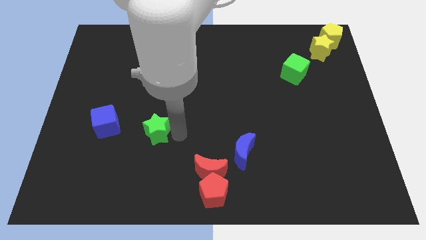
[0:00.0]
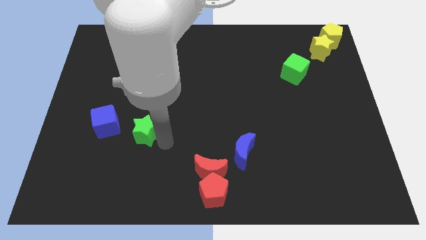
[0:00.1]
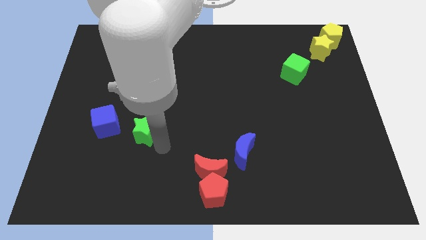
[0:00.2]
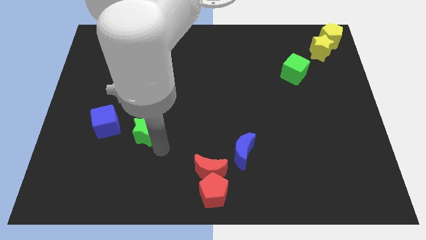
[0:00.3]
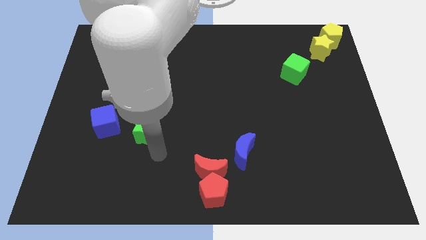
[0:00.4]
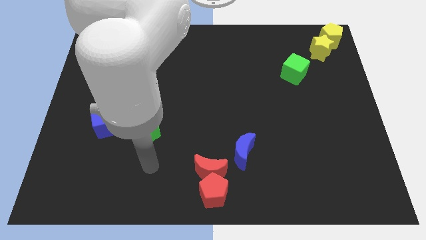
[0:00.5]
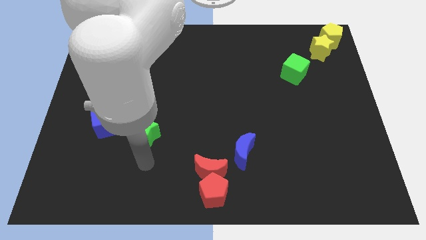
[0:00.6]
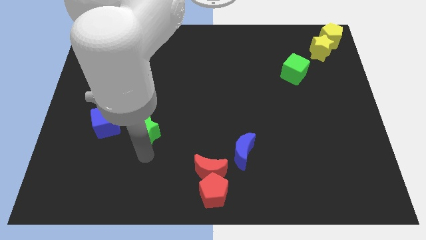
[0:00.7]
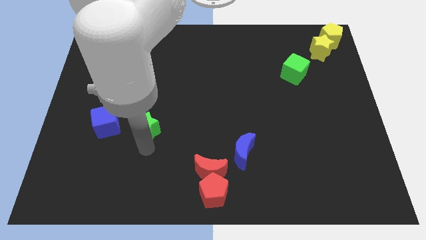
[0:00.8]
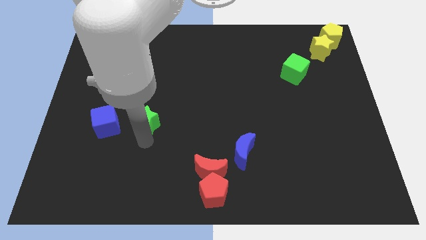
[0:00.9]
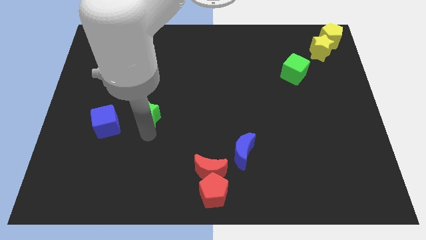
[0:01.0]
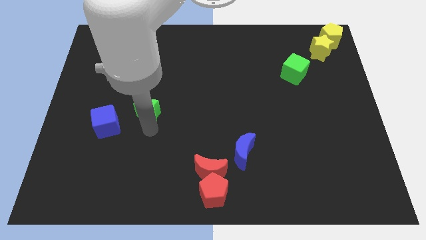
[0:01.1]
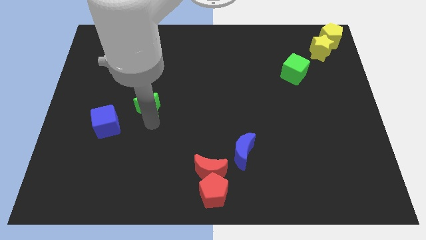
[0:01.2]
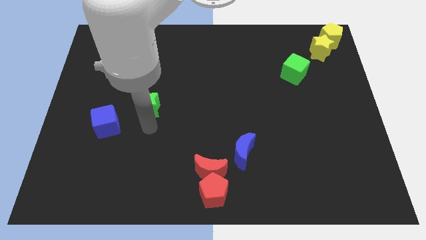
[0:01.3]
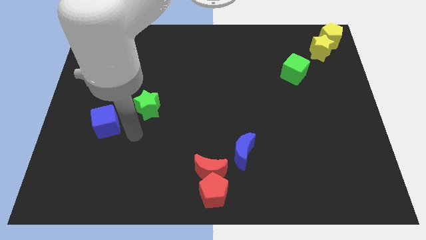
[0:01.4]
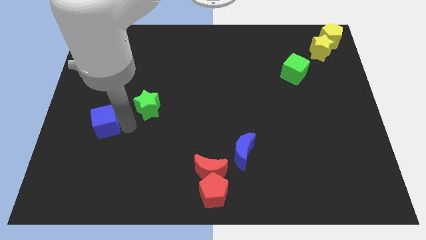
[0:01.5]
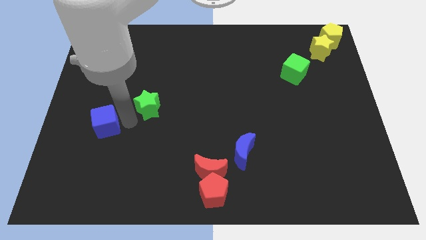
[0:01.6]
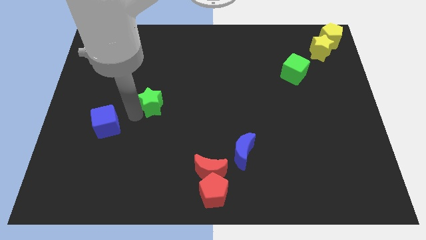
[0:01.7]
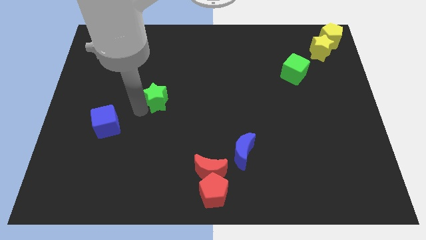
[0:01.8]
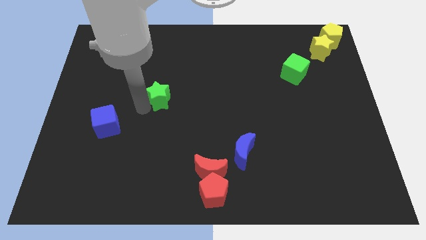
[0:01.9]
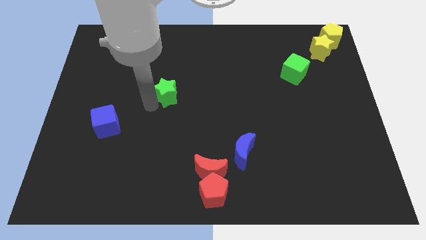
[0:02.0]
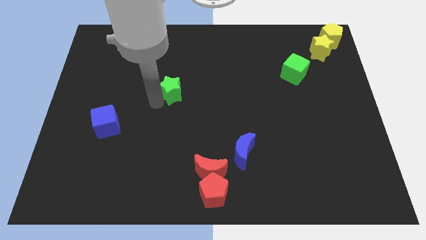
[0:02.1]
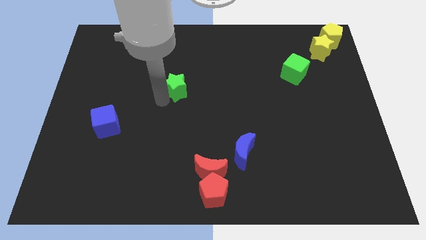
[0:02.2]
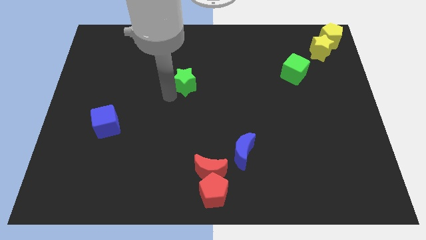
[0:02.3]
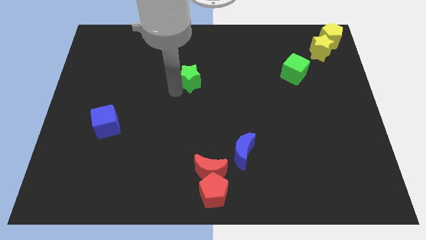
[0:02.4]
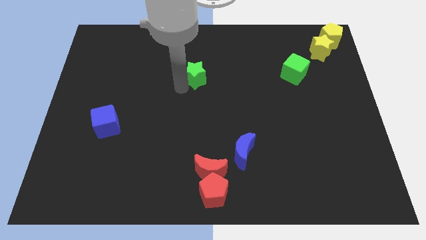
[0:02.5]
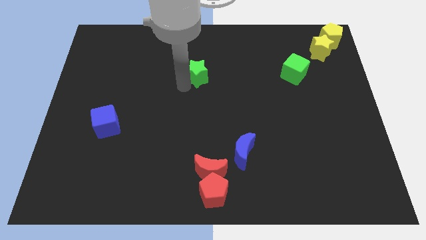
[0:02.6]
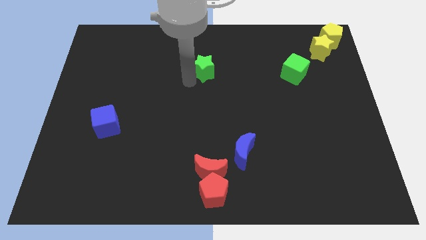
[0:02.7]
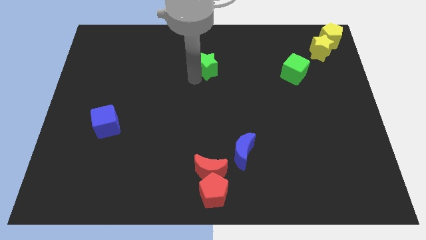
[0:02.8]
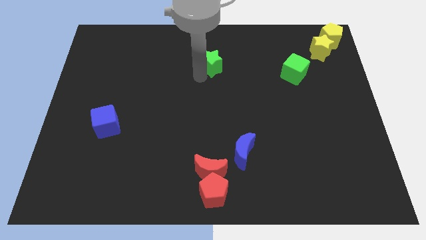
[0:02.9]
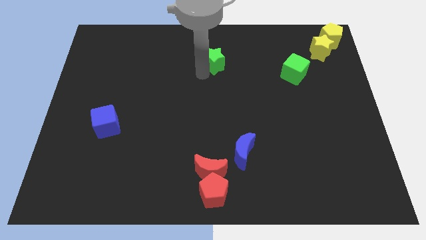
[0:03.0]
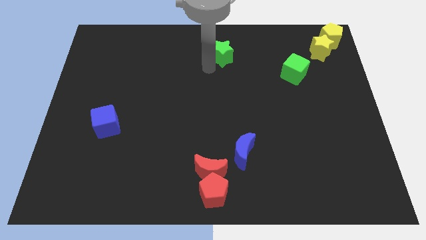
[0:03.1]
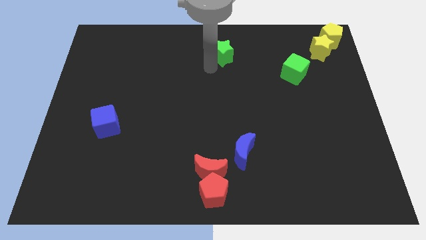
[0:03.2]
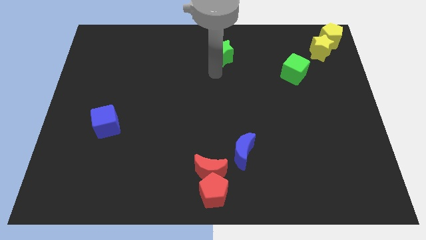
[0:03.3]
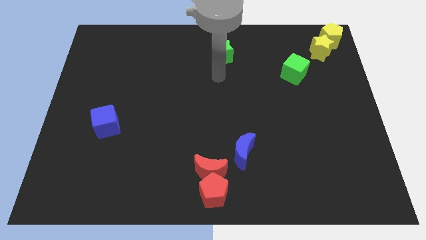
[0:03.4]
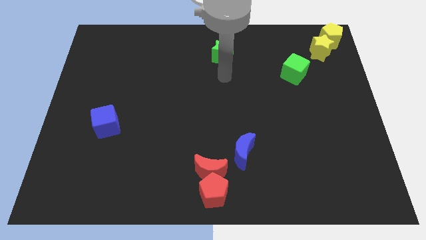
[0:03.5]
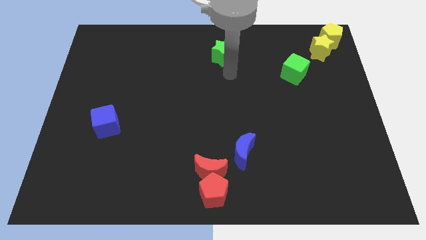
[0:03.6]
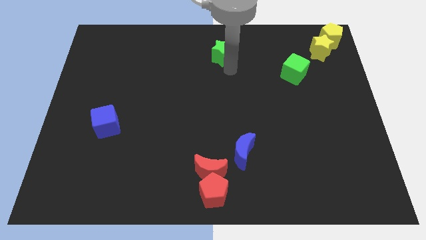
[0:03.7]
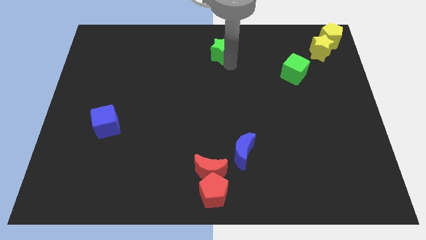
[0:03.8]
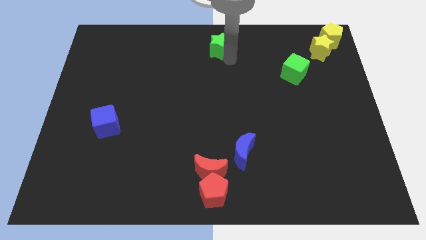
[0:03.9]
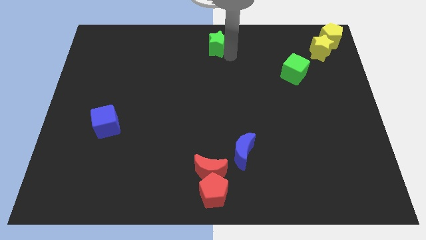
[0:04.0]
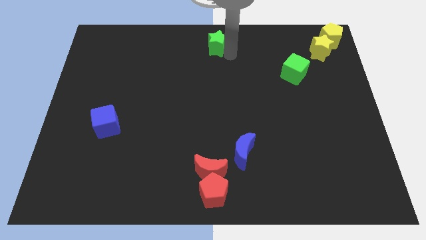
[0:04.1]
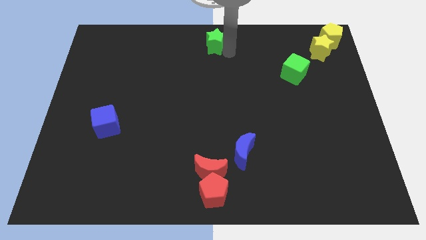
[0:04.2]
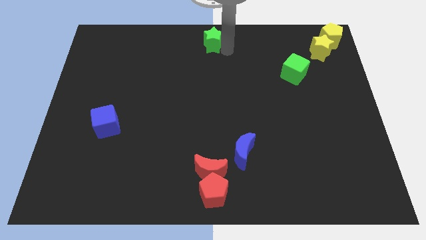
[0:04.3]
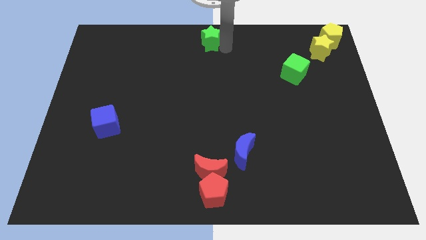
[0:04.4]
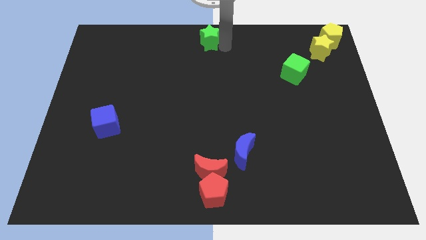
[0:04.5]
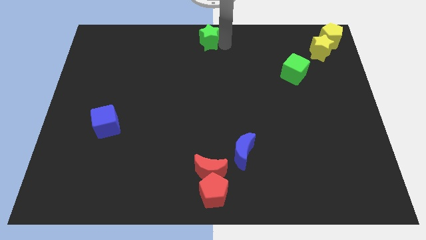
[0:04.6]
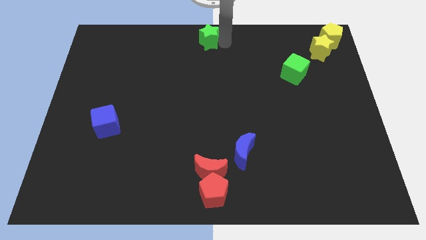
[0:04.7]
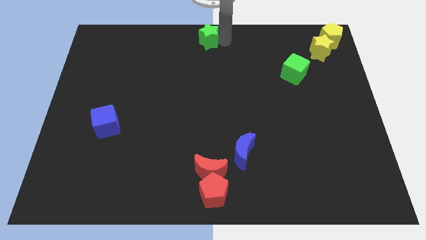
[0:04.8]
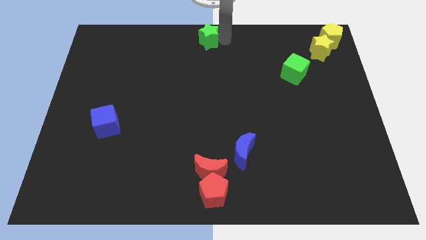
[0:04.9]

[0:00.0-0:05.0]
place the green star at the top center of the board

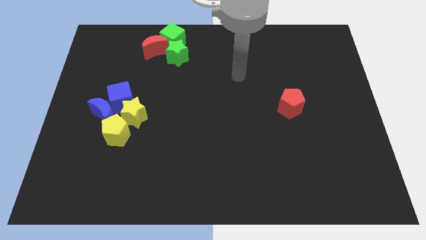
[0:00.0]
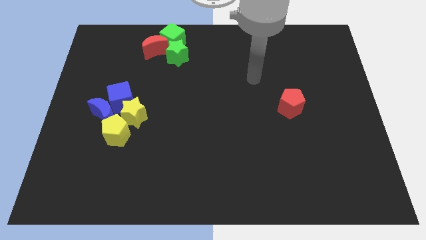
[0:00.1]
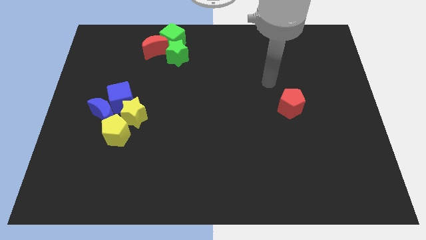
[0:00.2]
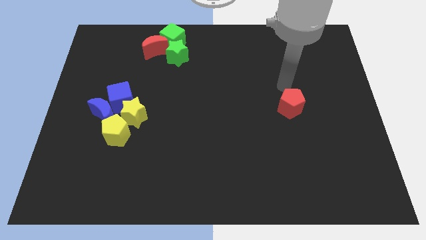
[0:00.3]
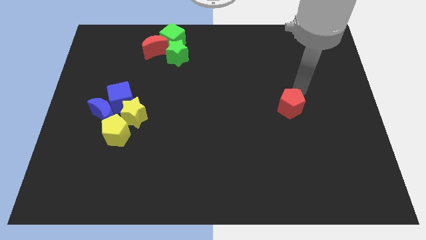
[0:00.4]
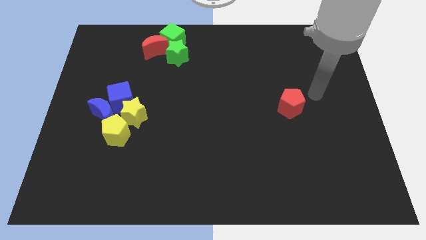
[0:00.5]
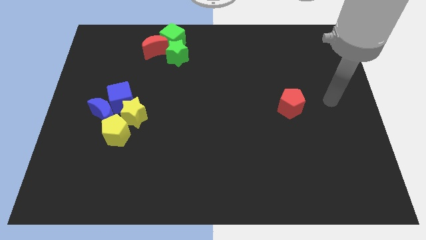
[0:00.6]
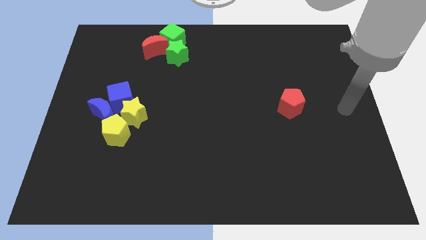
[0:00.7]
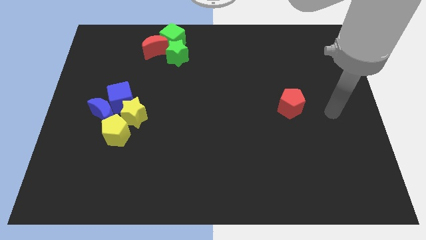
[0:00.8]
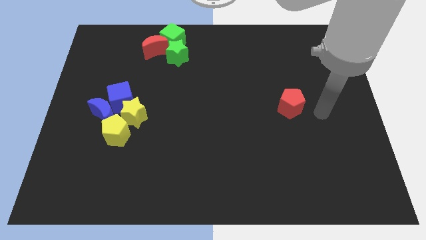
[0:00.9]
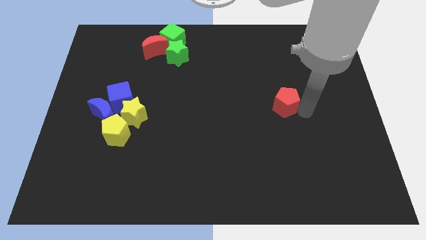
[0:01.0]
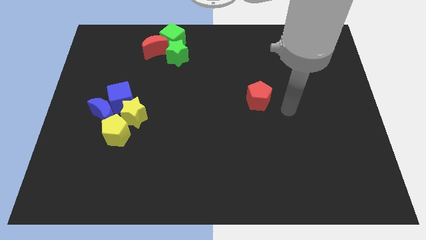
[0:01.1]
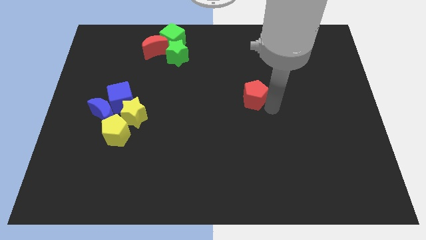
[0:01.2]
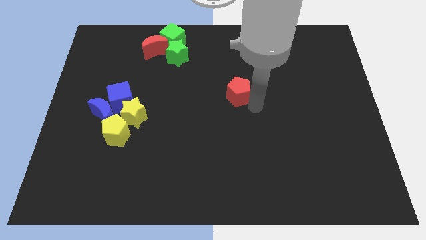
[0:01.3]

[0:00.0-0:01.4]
push red pentagon slightly towards left

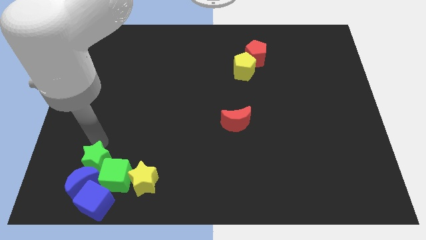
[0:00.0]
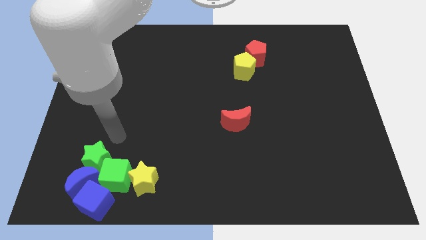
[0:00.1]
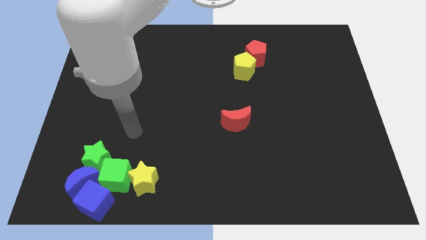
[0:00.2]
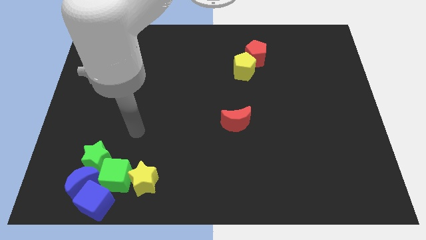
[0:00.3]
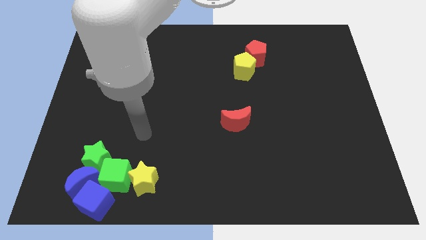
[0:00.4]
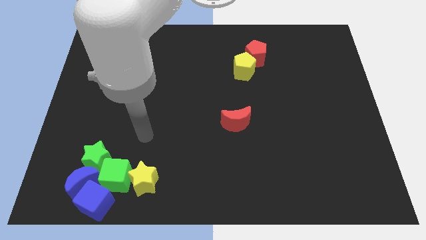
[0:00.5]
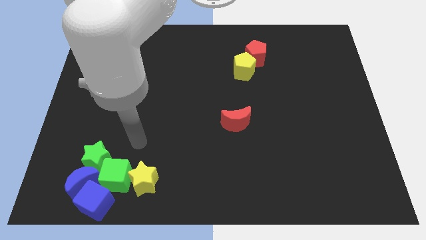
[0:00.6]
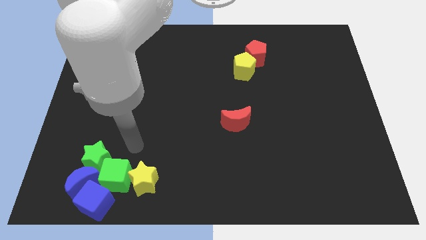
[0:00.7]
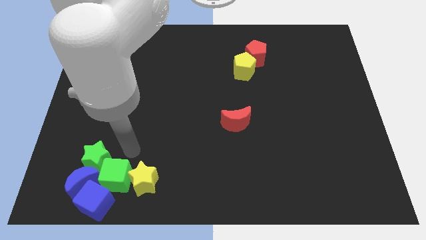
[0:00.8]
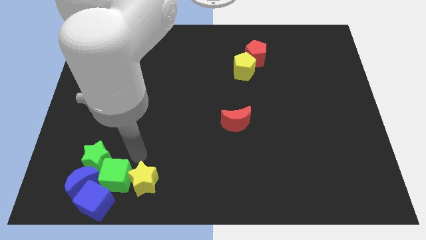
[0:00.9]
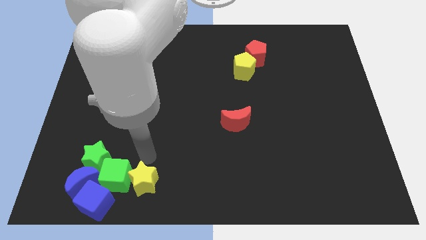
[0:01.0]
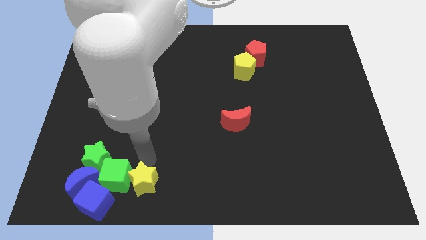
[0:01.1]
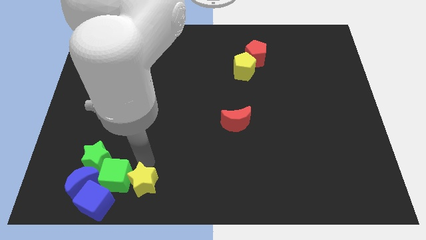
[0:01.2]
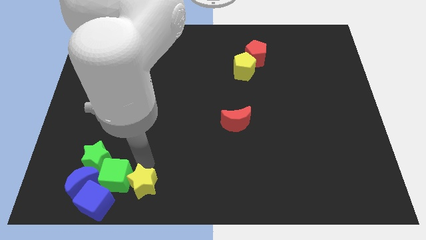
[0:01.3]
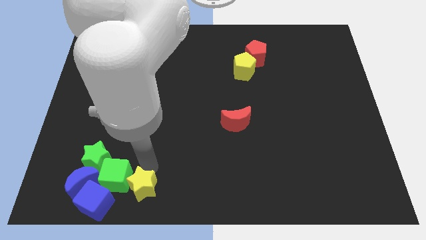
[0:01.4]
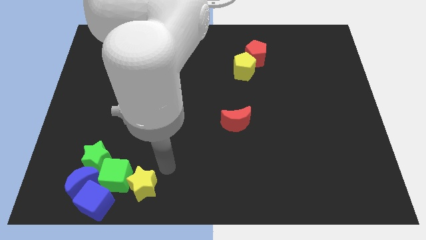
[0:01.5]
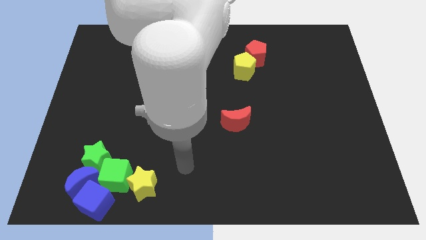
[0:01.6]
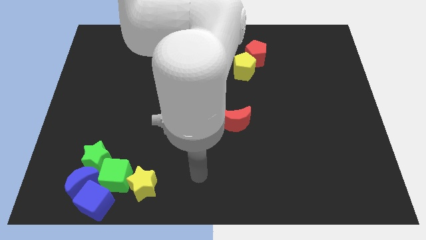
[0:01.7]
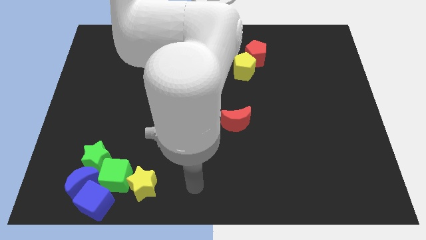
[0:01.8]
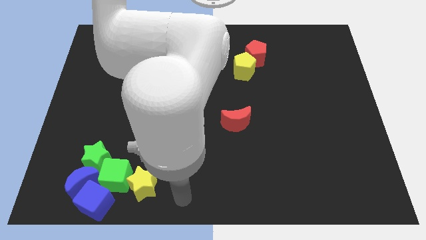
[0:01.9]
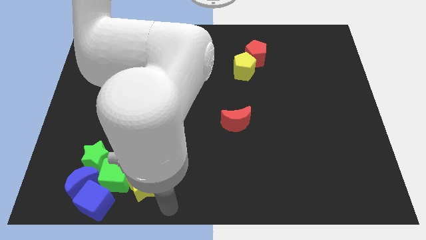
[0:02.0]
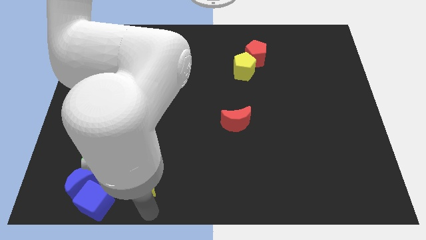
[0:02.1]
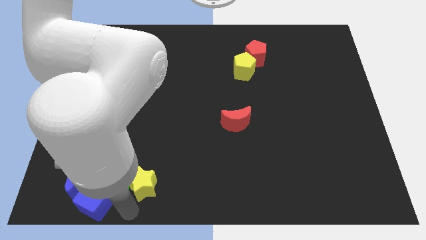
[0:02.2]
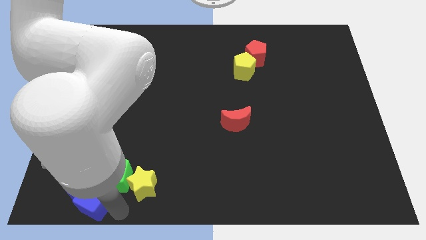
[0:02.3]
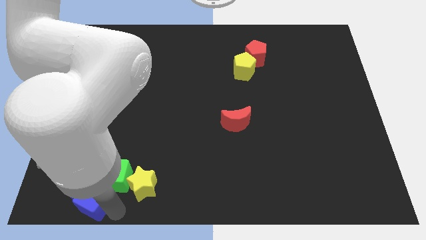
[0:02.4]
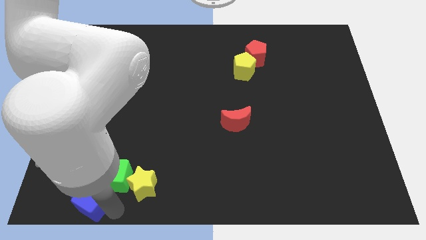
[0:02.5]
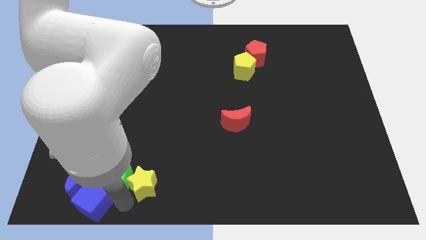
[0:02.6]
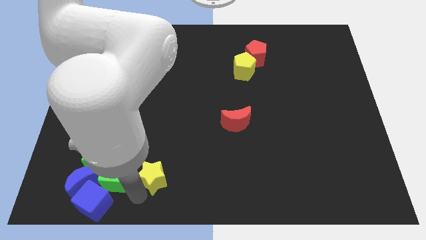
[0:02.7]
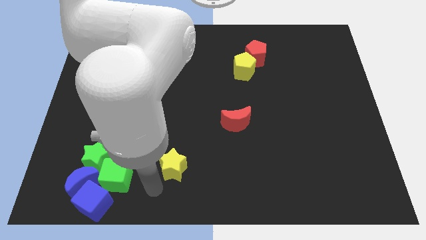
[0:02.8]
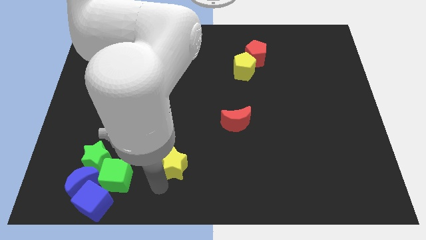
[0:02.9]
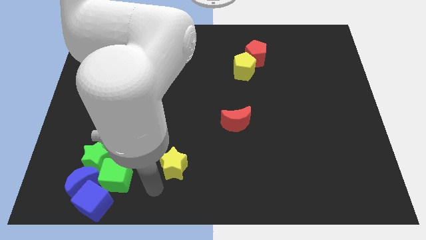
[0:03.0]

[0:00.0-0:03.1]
separate the yellow star from the green cube
